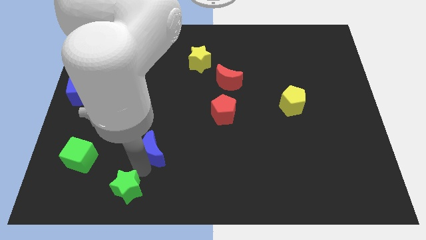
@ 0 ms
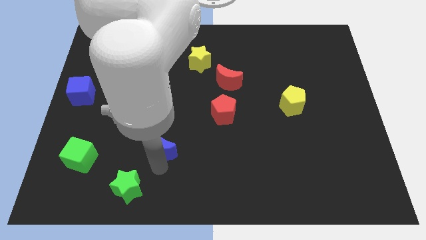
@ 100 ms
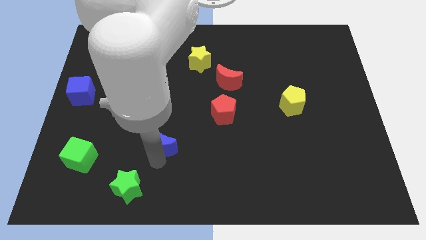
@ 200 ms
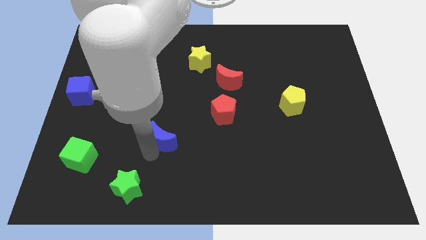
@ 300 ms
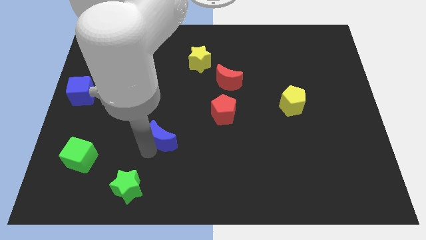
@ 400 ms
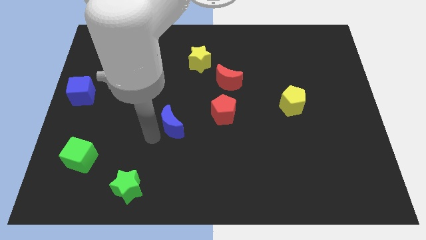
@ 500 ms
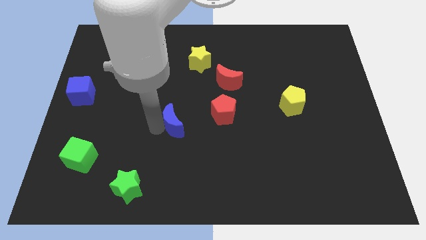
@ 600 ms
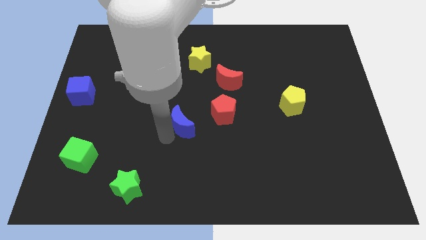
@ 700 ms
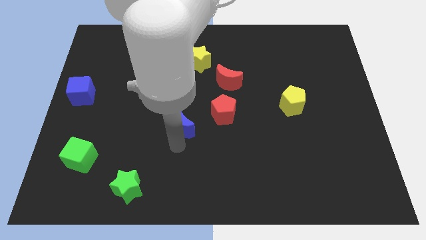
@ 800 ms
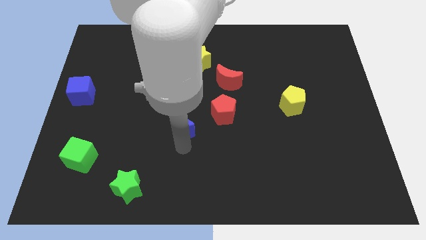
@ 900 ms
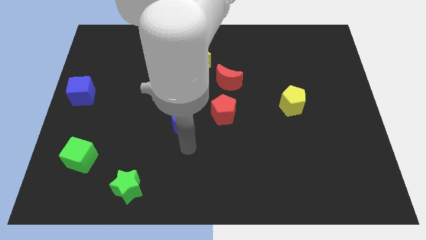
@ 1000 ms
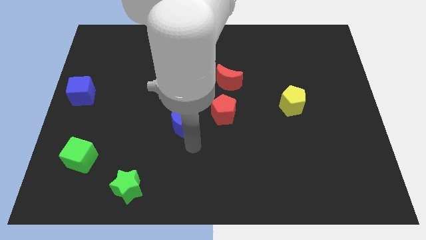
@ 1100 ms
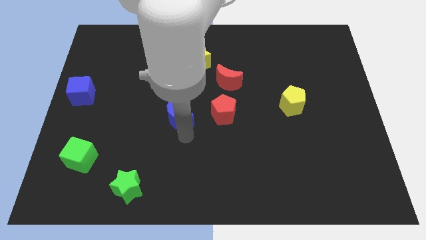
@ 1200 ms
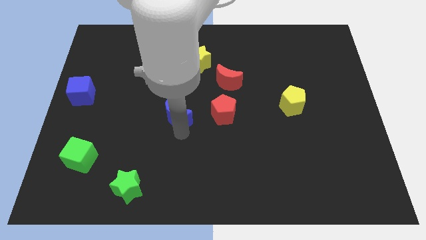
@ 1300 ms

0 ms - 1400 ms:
move the blue crescent left to the red pentagon

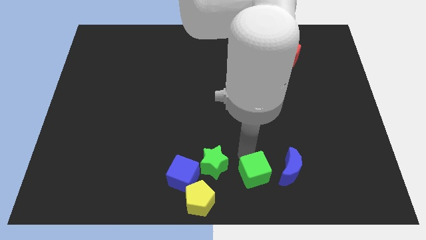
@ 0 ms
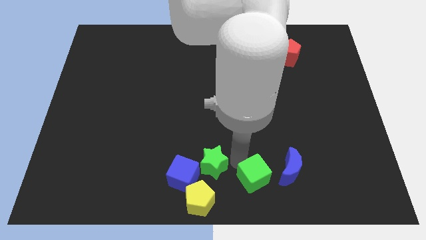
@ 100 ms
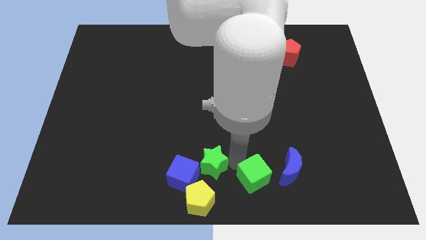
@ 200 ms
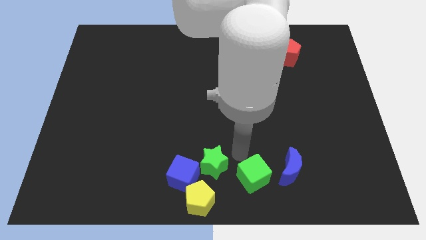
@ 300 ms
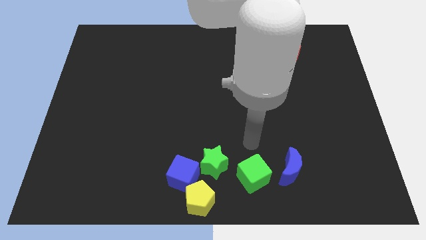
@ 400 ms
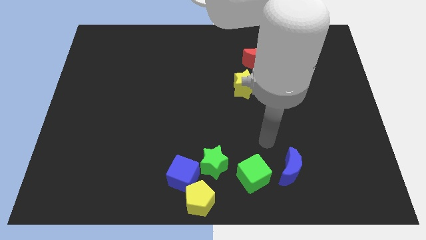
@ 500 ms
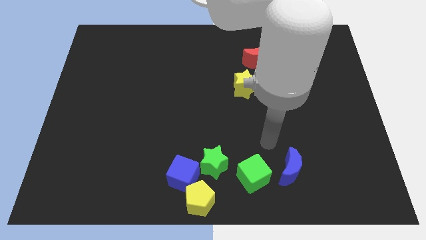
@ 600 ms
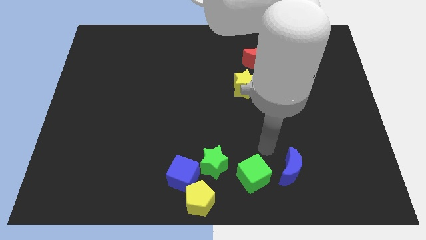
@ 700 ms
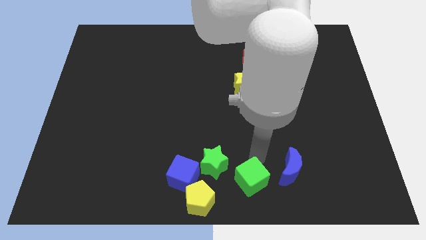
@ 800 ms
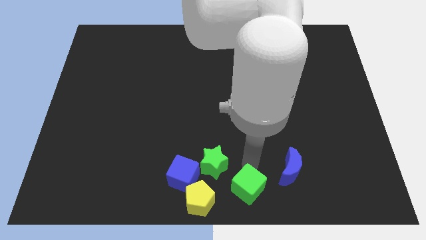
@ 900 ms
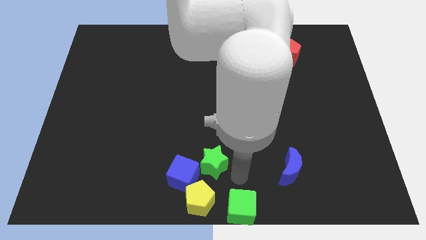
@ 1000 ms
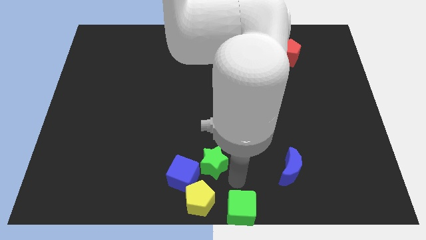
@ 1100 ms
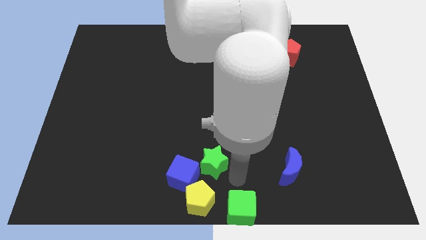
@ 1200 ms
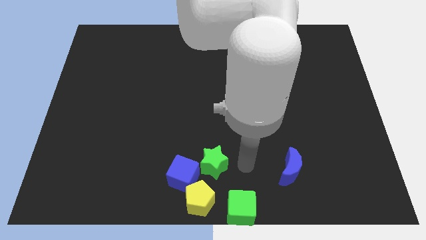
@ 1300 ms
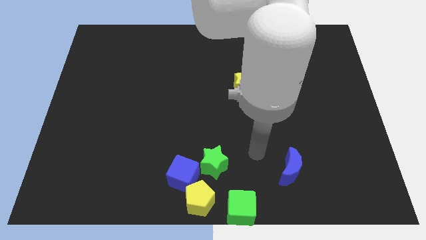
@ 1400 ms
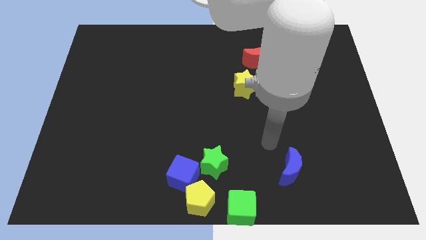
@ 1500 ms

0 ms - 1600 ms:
push the green cube to the bottom

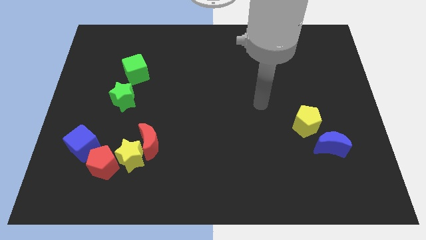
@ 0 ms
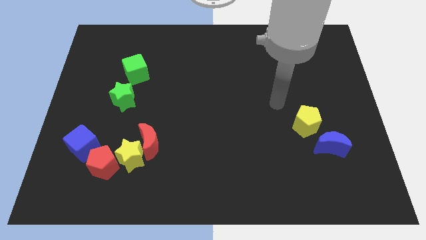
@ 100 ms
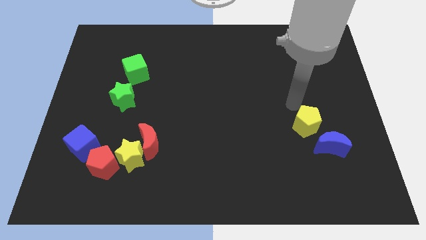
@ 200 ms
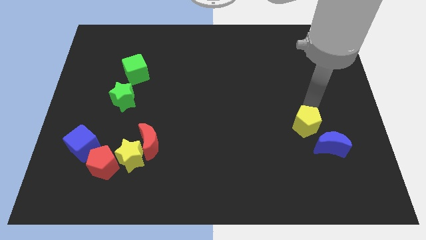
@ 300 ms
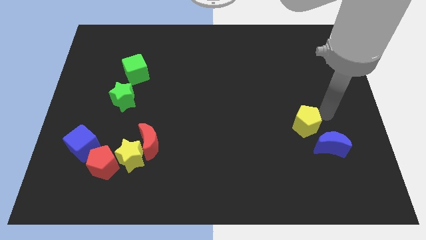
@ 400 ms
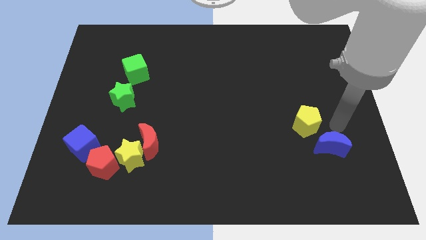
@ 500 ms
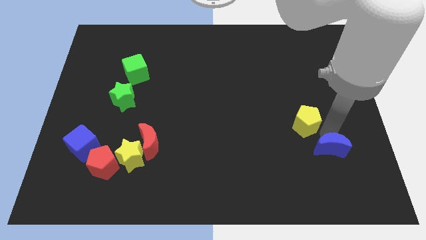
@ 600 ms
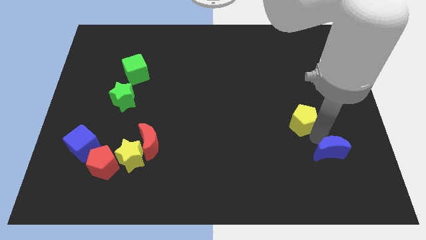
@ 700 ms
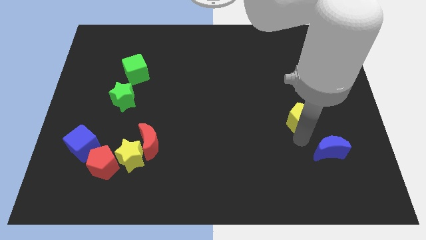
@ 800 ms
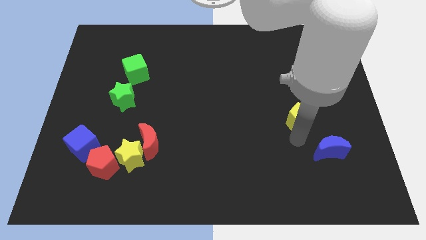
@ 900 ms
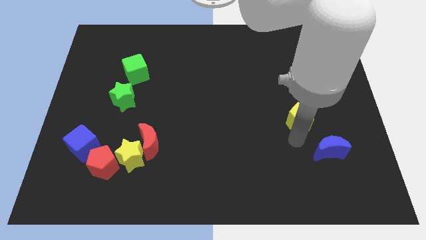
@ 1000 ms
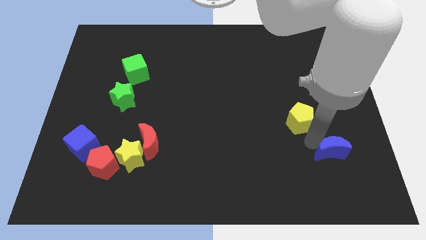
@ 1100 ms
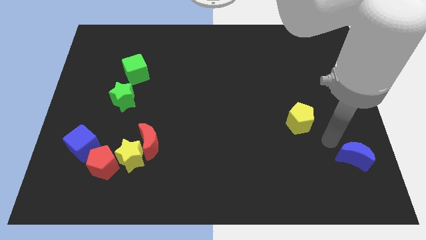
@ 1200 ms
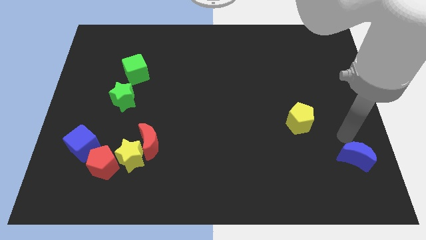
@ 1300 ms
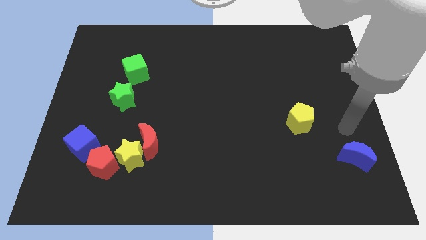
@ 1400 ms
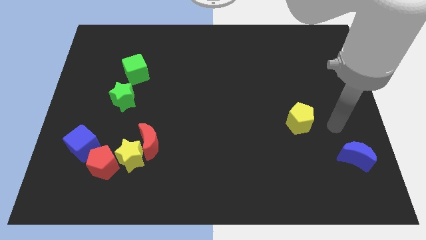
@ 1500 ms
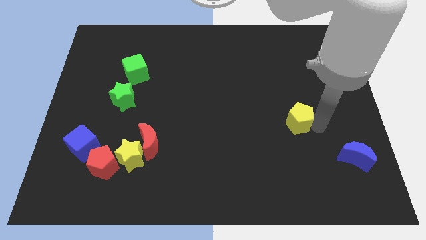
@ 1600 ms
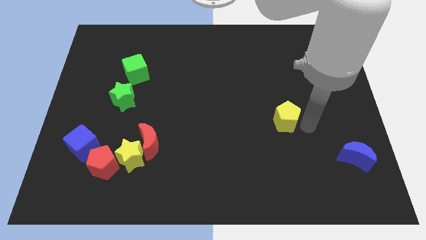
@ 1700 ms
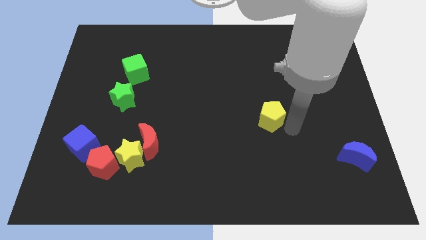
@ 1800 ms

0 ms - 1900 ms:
separate blue moon and yellow pentagon

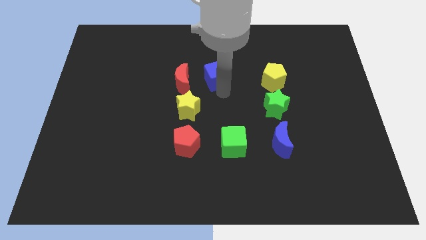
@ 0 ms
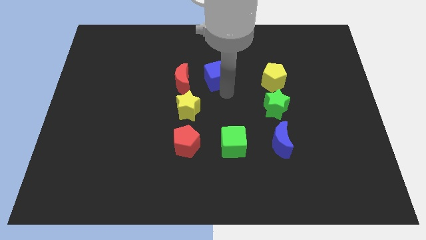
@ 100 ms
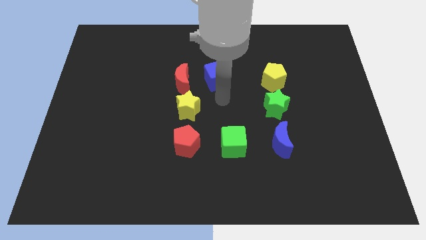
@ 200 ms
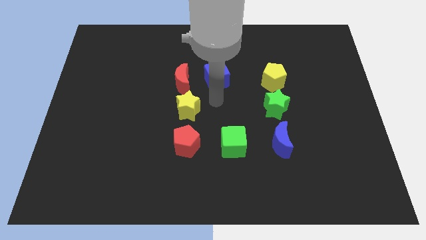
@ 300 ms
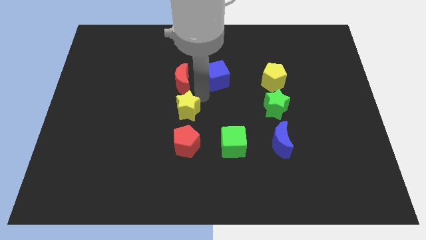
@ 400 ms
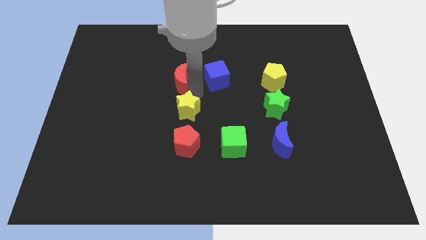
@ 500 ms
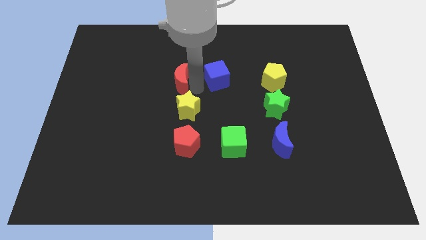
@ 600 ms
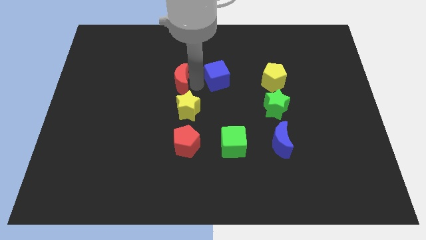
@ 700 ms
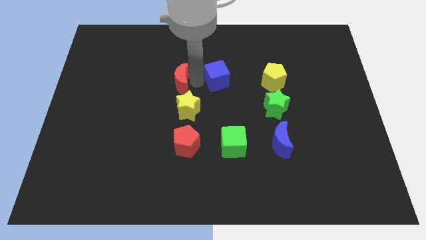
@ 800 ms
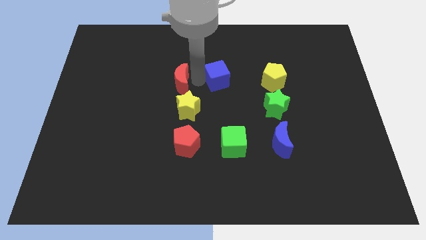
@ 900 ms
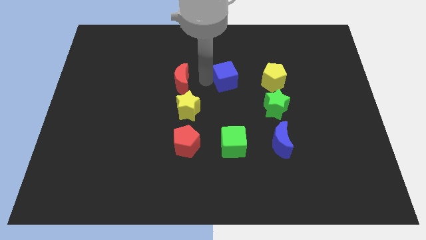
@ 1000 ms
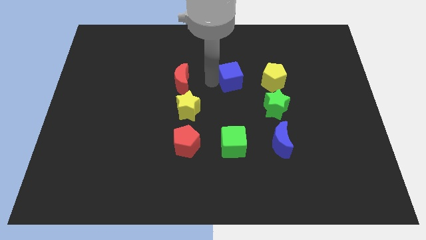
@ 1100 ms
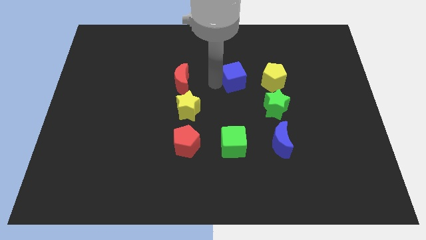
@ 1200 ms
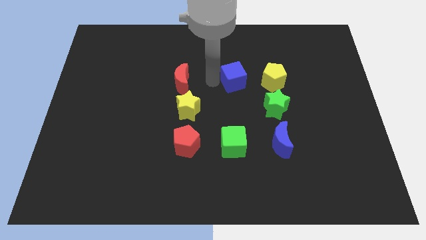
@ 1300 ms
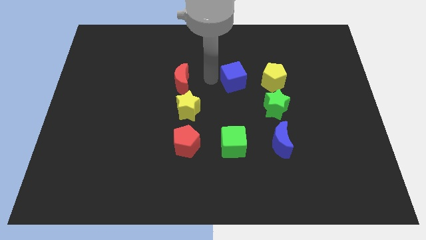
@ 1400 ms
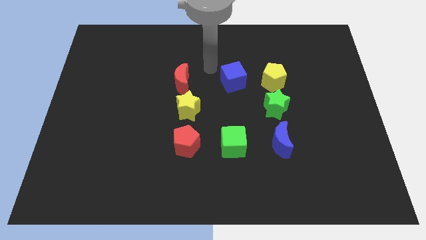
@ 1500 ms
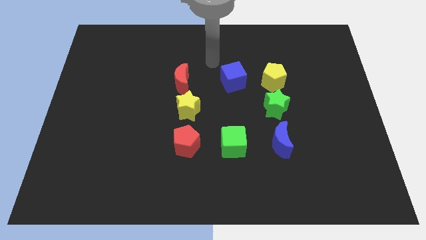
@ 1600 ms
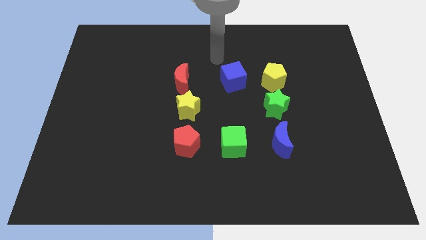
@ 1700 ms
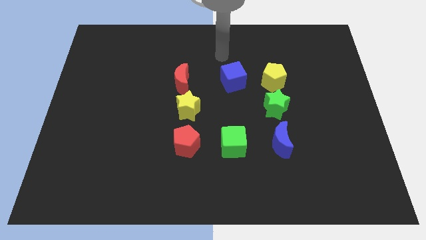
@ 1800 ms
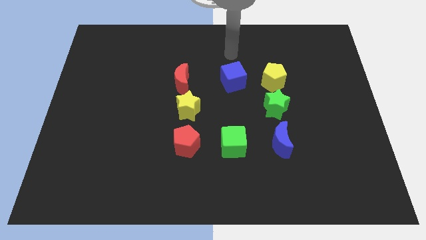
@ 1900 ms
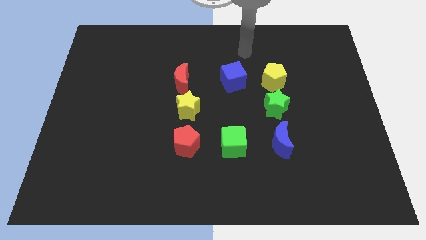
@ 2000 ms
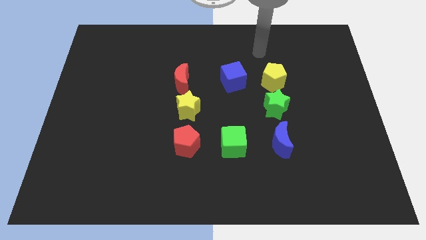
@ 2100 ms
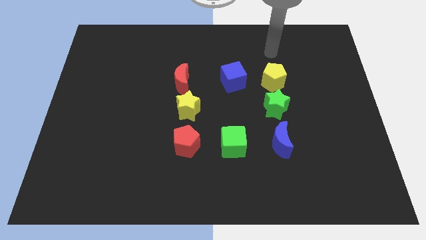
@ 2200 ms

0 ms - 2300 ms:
adjust the blue cube

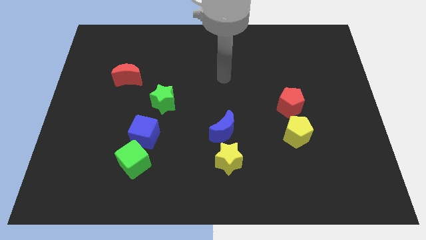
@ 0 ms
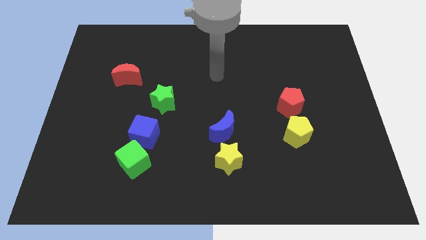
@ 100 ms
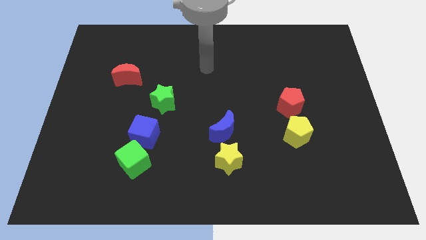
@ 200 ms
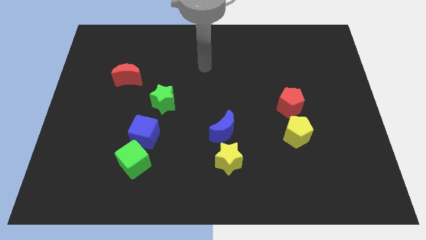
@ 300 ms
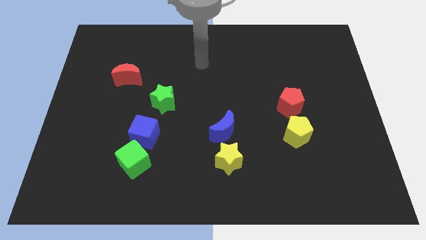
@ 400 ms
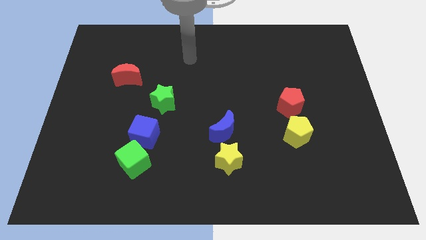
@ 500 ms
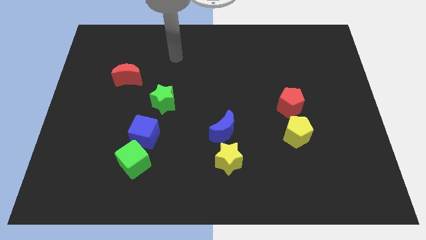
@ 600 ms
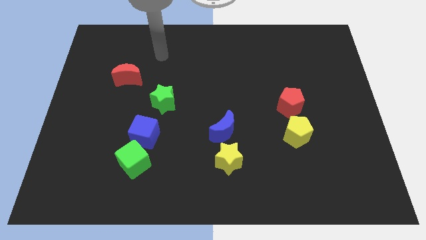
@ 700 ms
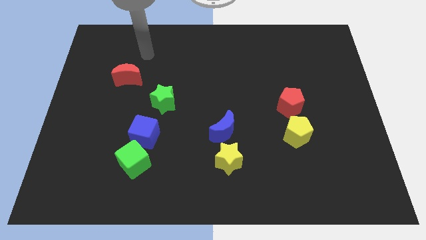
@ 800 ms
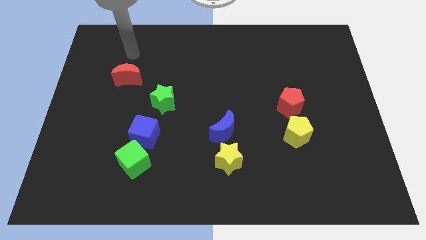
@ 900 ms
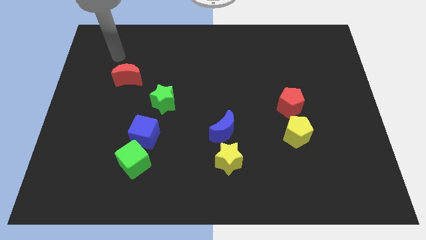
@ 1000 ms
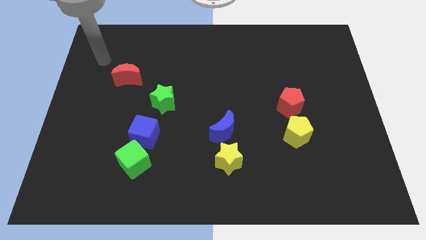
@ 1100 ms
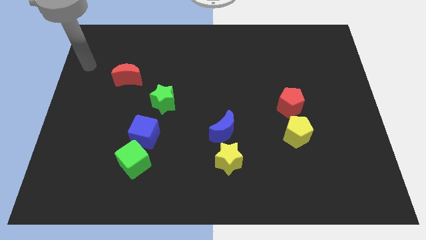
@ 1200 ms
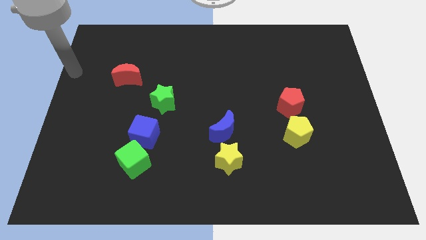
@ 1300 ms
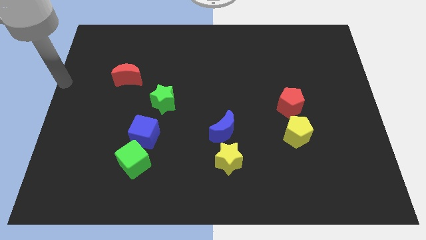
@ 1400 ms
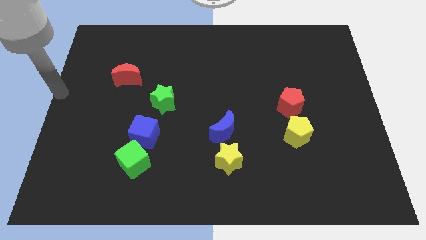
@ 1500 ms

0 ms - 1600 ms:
move your arm to the left center of the board
